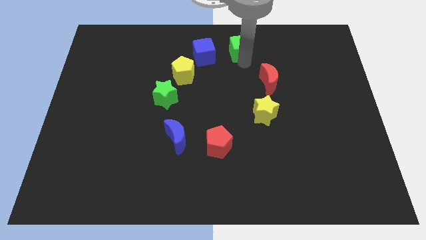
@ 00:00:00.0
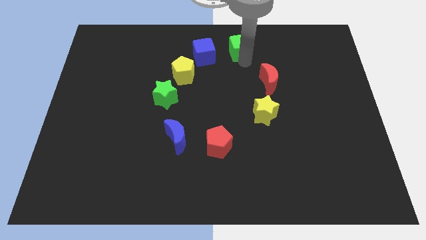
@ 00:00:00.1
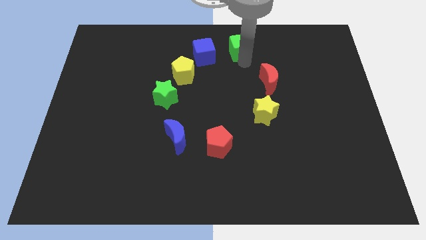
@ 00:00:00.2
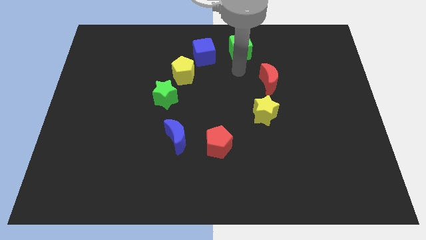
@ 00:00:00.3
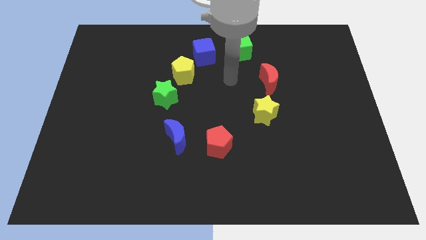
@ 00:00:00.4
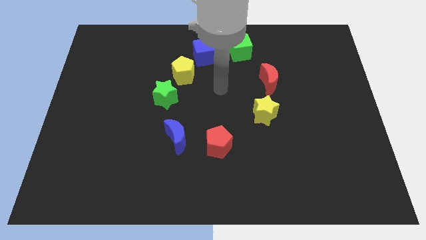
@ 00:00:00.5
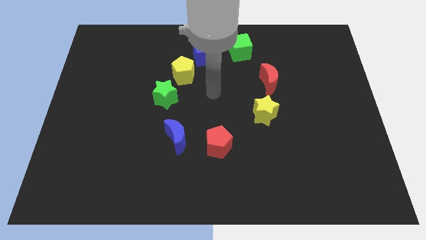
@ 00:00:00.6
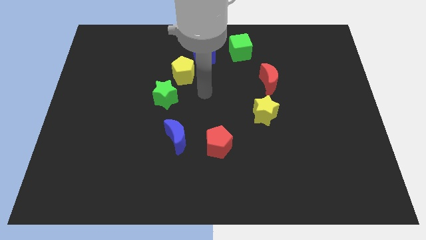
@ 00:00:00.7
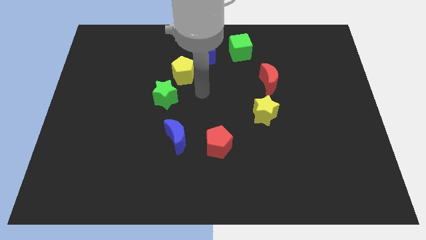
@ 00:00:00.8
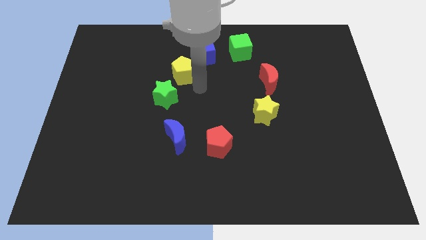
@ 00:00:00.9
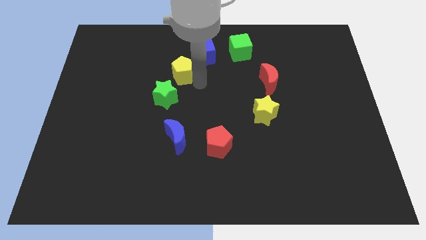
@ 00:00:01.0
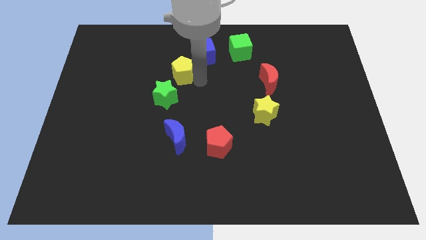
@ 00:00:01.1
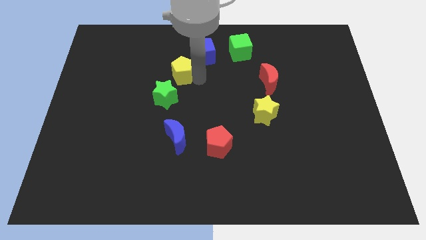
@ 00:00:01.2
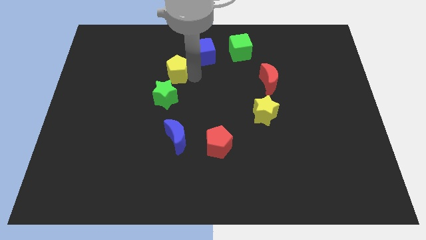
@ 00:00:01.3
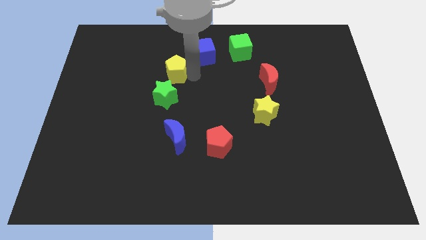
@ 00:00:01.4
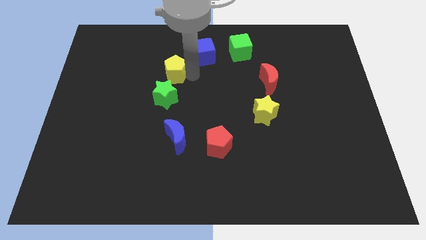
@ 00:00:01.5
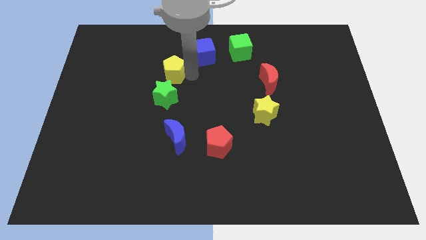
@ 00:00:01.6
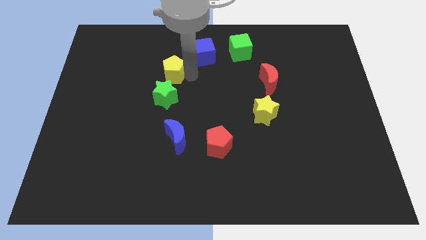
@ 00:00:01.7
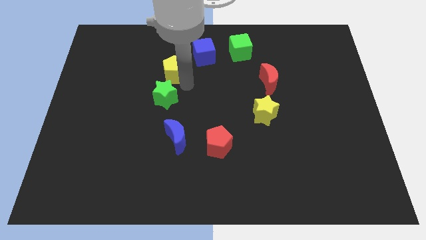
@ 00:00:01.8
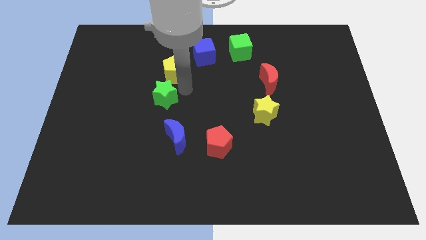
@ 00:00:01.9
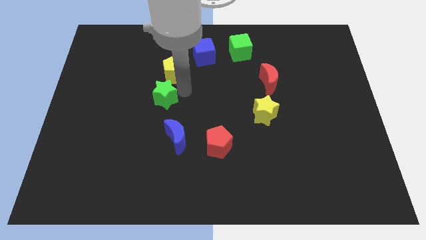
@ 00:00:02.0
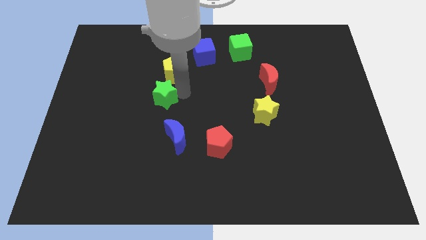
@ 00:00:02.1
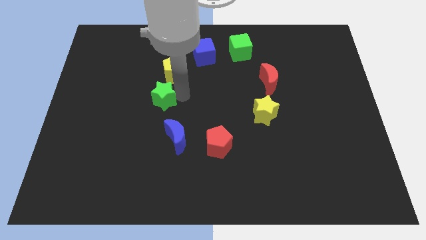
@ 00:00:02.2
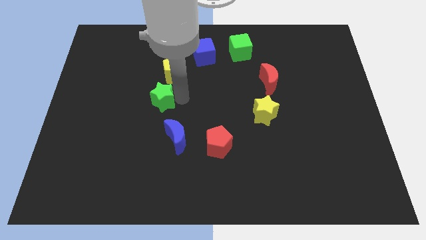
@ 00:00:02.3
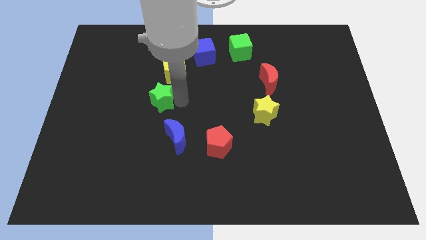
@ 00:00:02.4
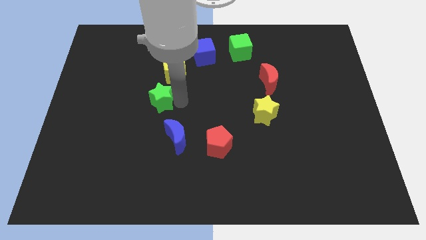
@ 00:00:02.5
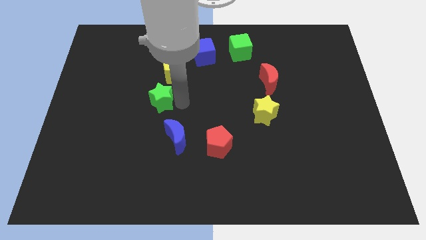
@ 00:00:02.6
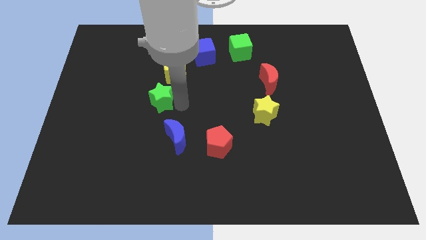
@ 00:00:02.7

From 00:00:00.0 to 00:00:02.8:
slightly touch right to the green star

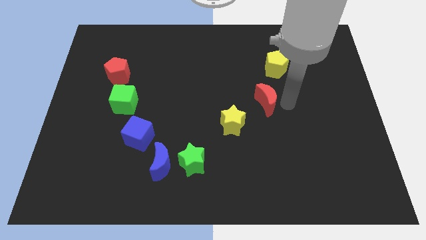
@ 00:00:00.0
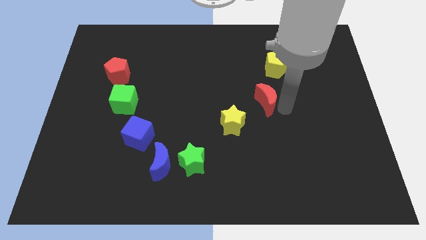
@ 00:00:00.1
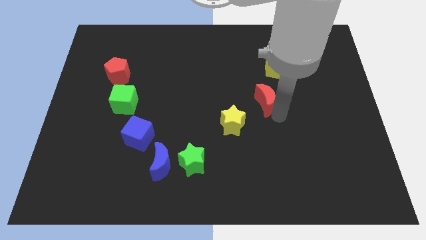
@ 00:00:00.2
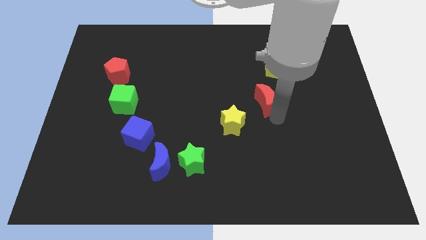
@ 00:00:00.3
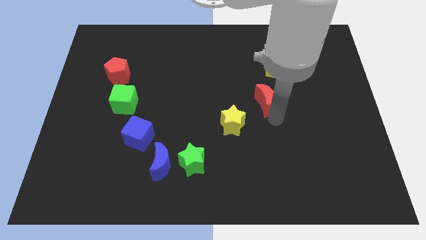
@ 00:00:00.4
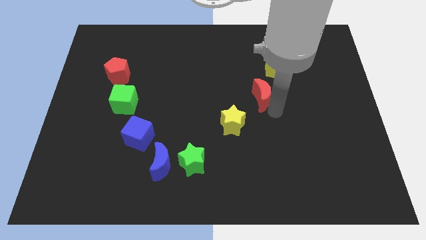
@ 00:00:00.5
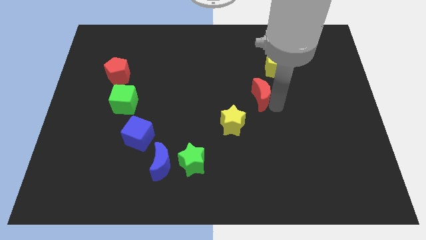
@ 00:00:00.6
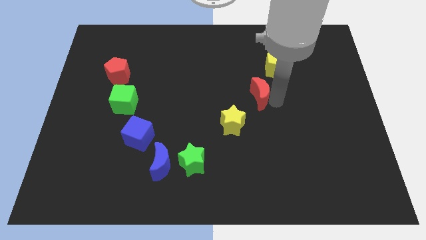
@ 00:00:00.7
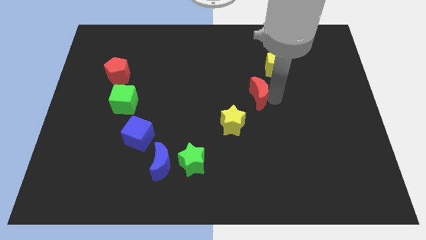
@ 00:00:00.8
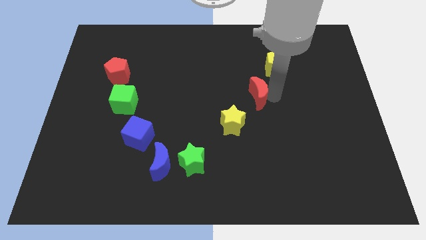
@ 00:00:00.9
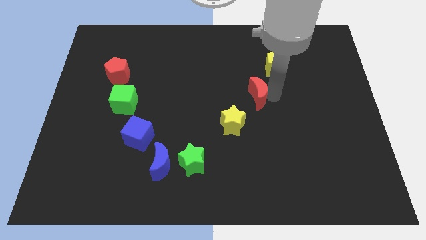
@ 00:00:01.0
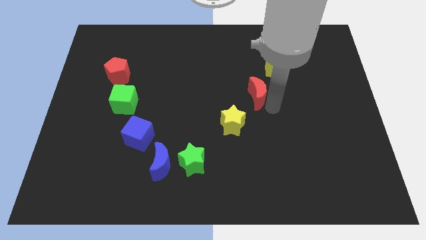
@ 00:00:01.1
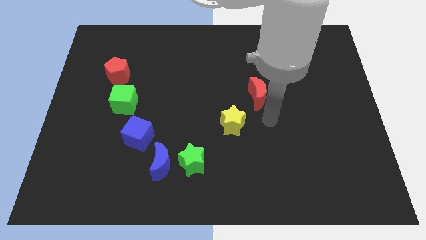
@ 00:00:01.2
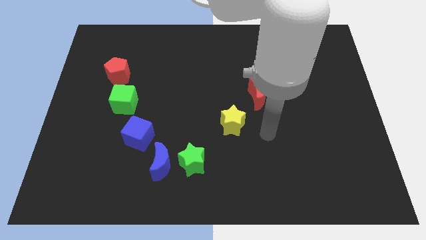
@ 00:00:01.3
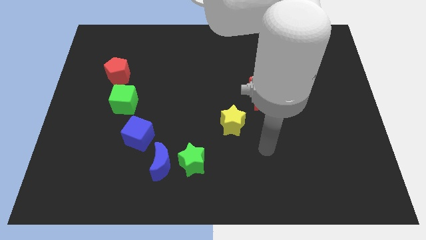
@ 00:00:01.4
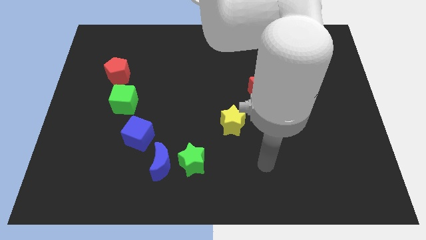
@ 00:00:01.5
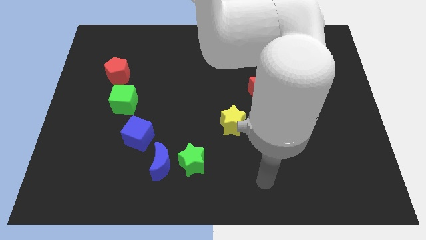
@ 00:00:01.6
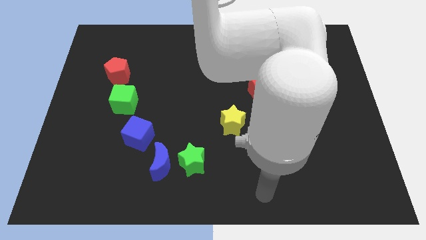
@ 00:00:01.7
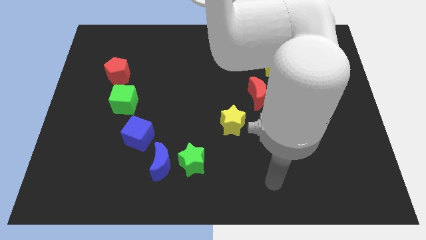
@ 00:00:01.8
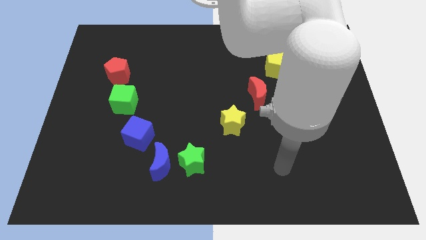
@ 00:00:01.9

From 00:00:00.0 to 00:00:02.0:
place red crescent diagonally towards yellow star

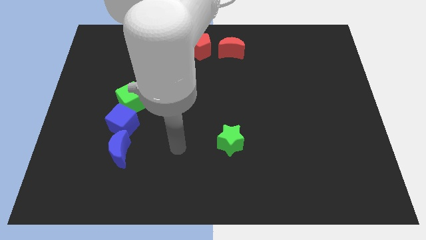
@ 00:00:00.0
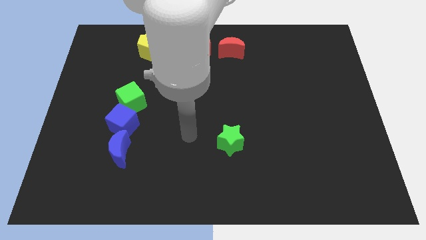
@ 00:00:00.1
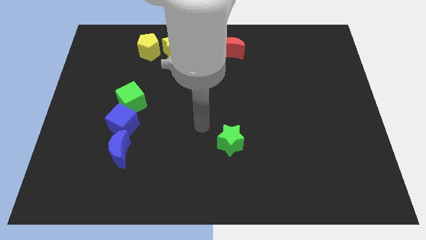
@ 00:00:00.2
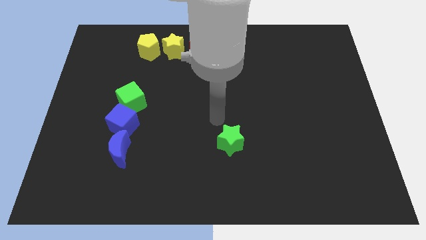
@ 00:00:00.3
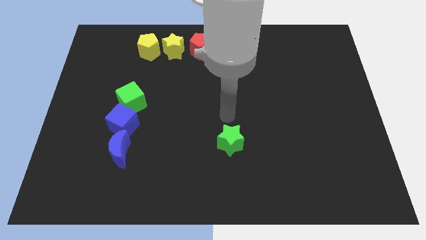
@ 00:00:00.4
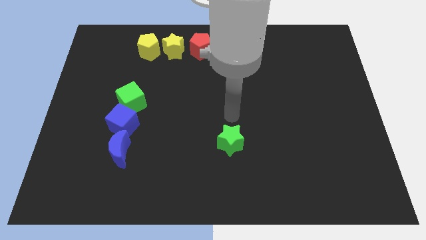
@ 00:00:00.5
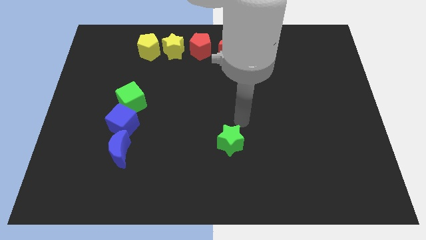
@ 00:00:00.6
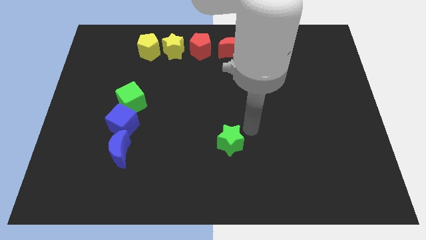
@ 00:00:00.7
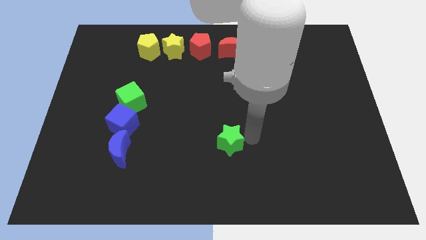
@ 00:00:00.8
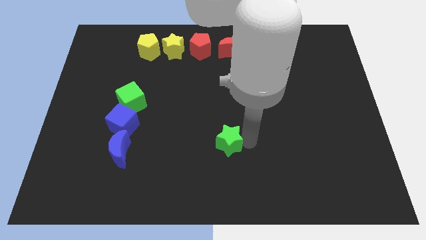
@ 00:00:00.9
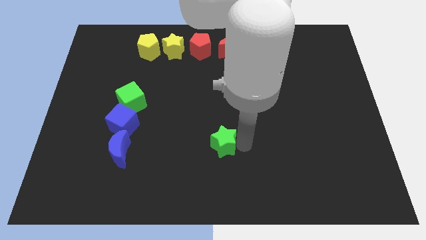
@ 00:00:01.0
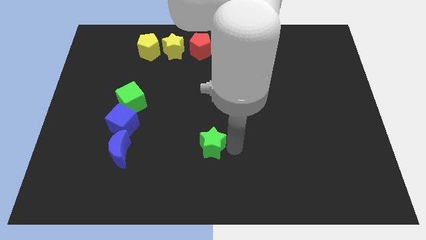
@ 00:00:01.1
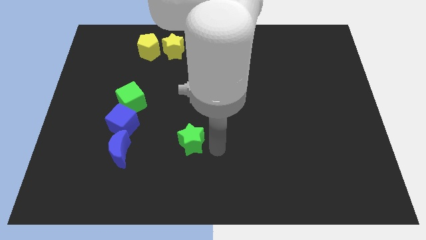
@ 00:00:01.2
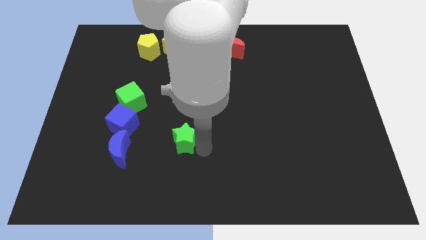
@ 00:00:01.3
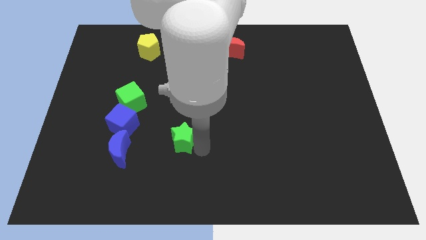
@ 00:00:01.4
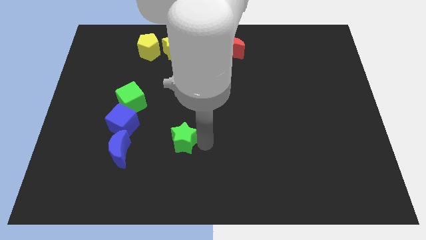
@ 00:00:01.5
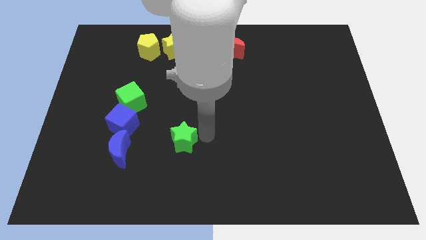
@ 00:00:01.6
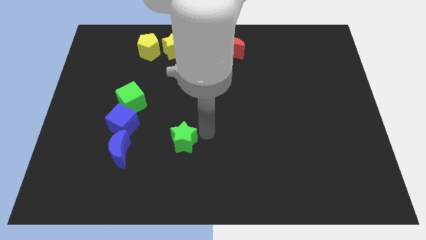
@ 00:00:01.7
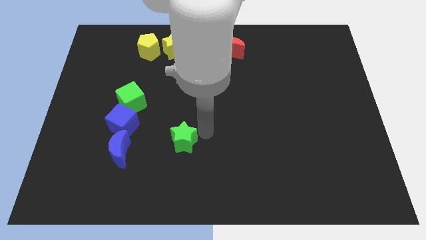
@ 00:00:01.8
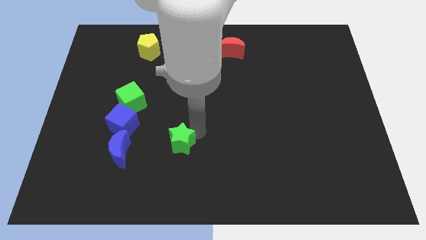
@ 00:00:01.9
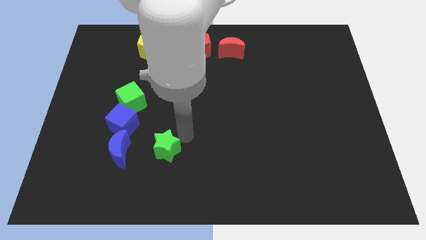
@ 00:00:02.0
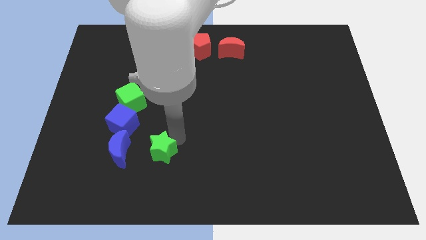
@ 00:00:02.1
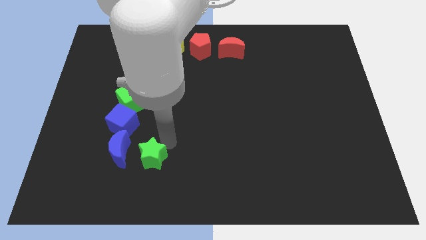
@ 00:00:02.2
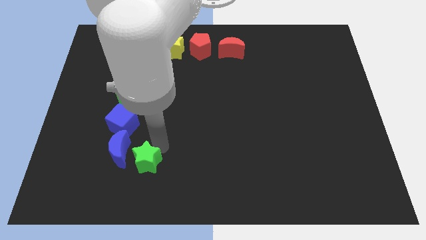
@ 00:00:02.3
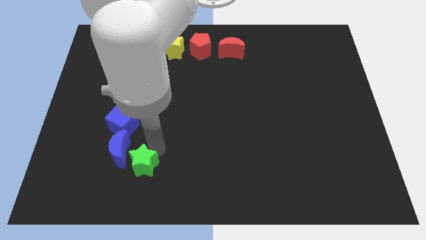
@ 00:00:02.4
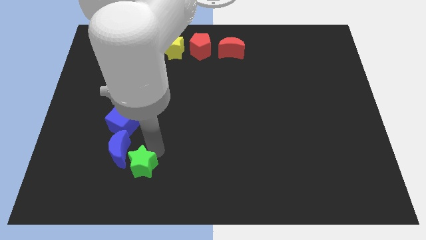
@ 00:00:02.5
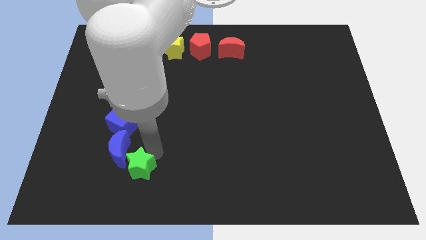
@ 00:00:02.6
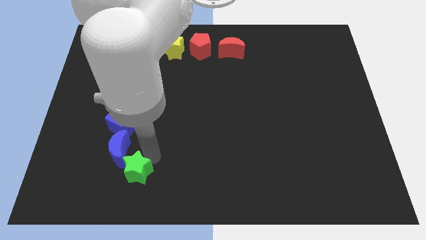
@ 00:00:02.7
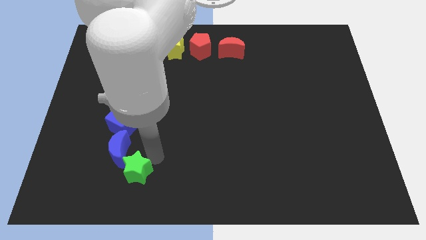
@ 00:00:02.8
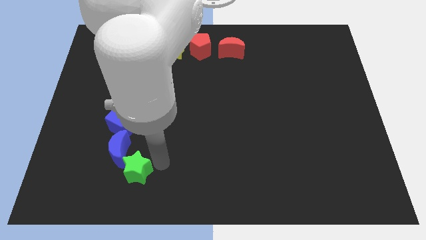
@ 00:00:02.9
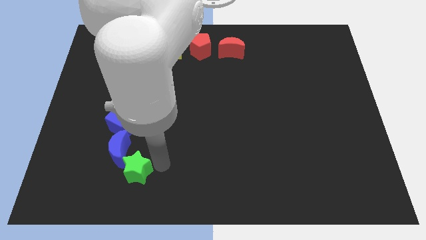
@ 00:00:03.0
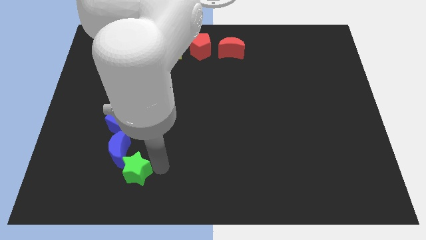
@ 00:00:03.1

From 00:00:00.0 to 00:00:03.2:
push the green star towards the bottom side of the blue crescent

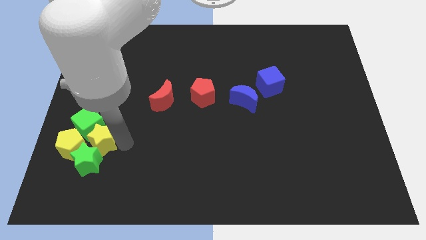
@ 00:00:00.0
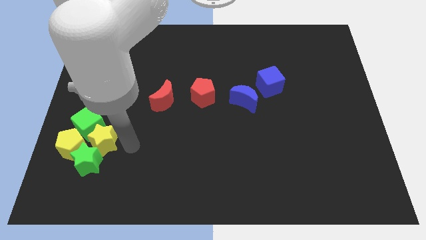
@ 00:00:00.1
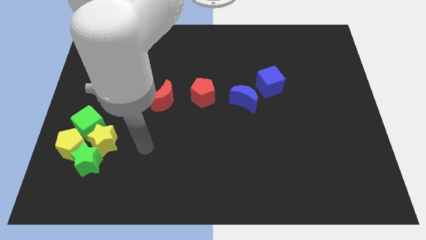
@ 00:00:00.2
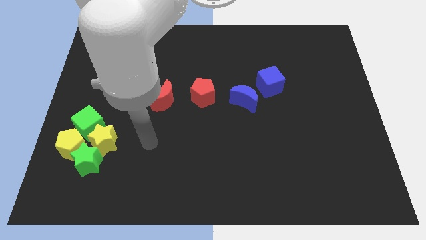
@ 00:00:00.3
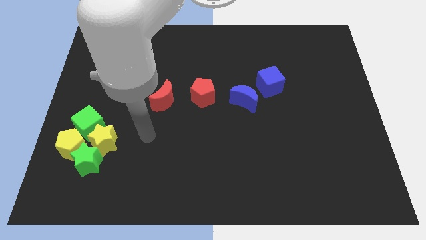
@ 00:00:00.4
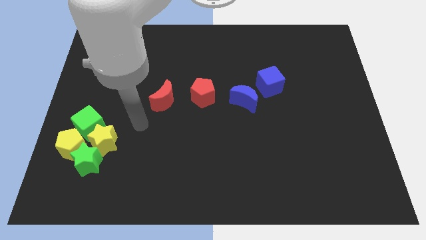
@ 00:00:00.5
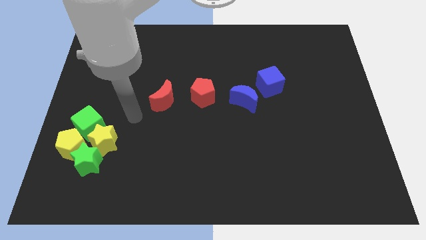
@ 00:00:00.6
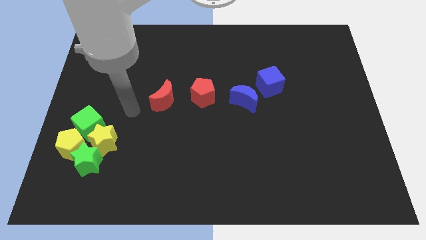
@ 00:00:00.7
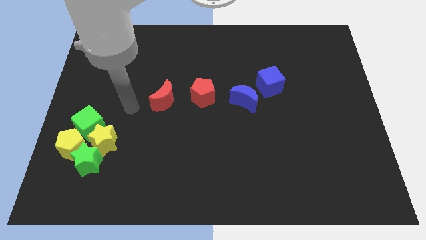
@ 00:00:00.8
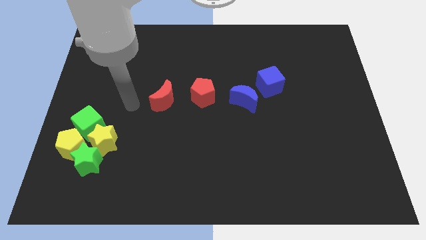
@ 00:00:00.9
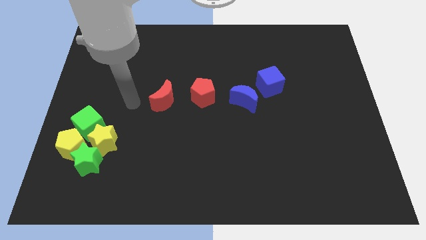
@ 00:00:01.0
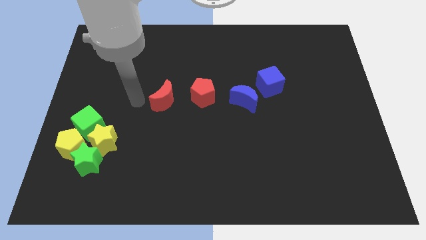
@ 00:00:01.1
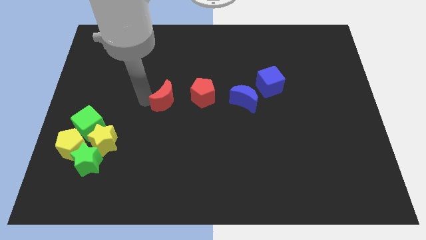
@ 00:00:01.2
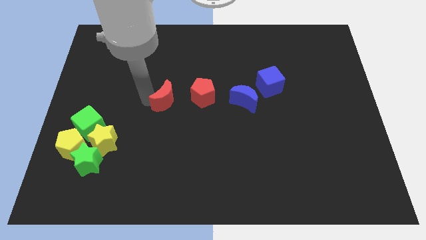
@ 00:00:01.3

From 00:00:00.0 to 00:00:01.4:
move the arm to the red crescent
